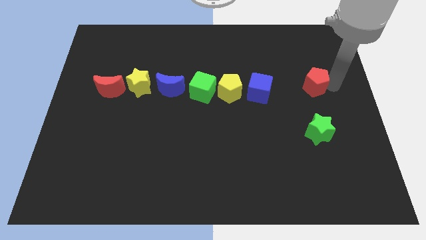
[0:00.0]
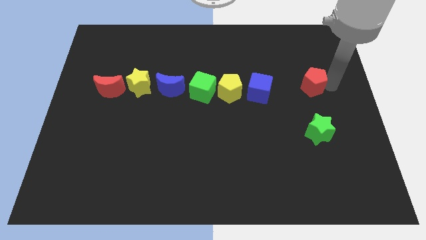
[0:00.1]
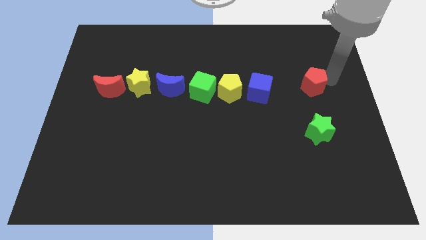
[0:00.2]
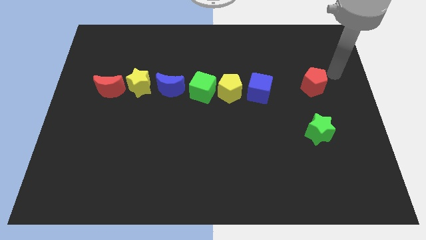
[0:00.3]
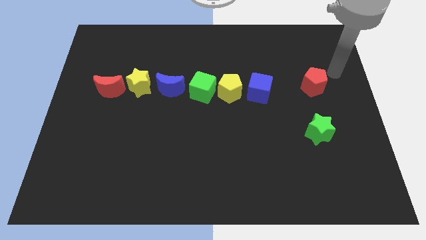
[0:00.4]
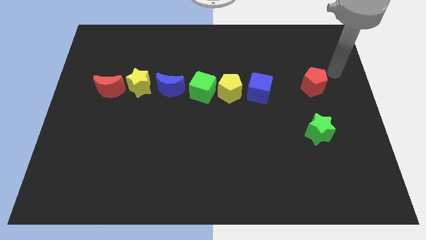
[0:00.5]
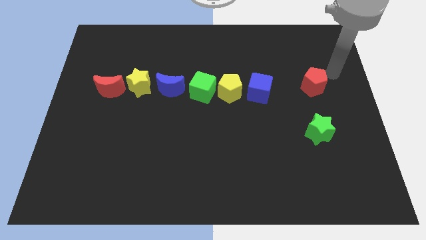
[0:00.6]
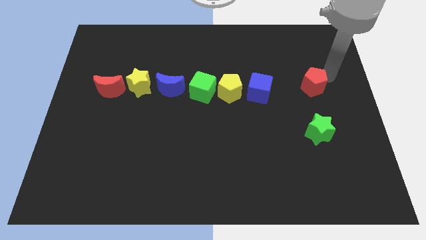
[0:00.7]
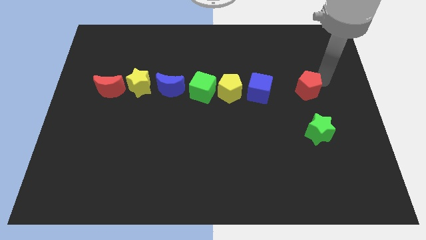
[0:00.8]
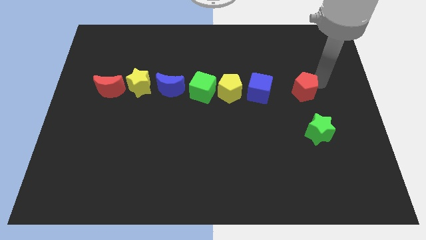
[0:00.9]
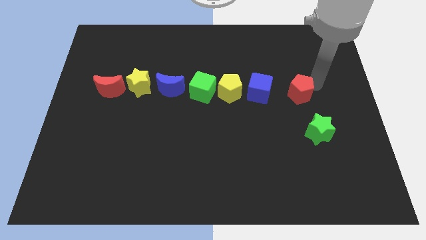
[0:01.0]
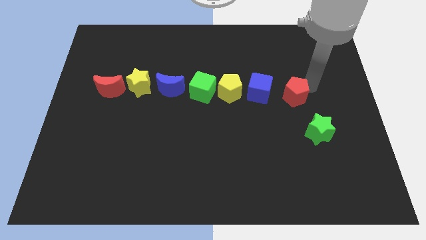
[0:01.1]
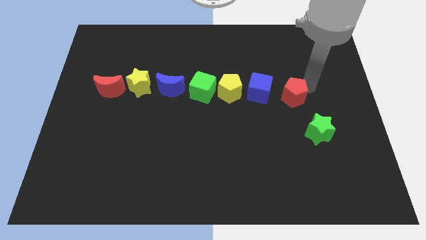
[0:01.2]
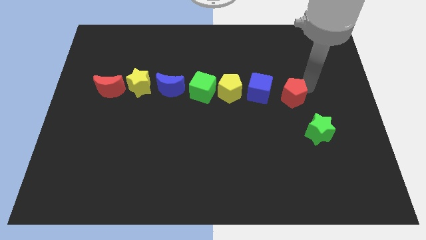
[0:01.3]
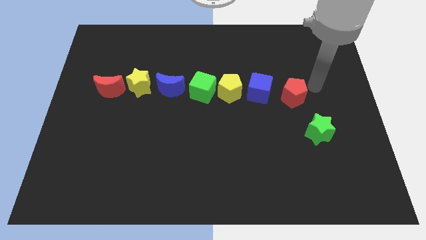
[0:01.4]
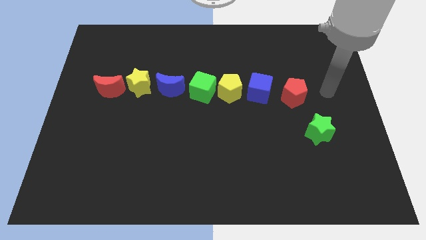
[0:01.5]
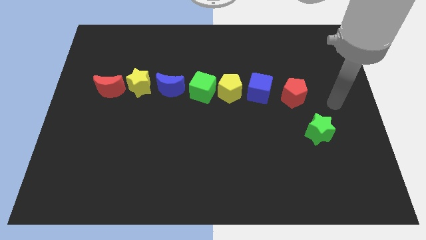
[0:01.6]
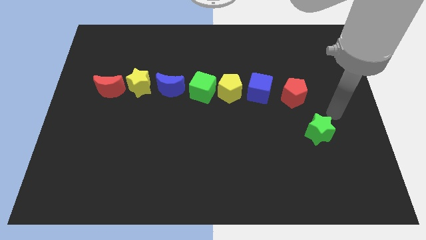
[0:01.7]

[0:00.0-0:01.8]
push the red pentagon to the right of the blue cube

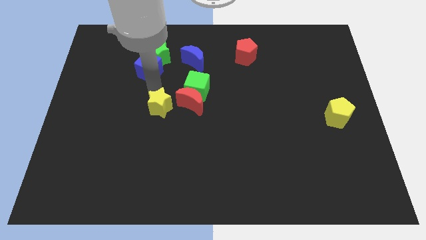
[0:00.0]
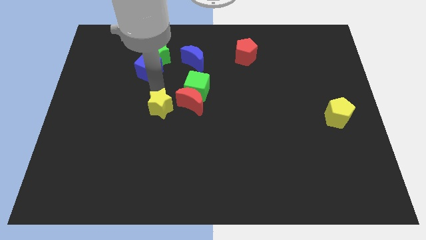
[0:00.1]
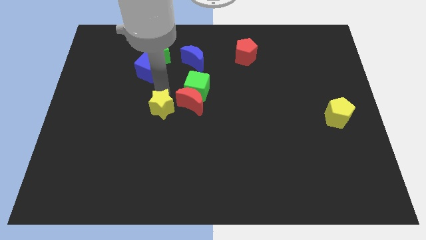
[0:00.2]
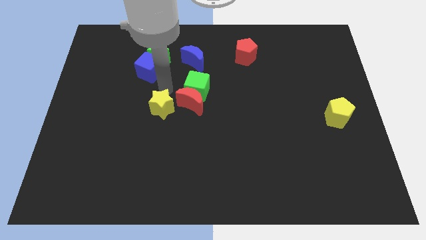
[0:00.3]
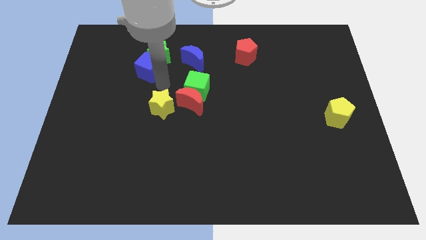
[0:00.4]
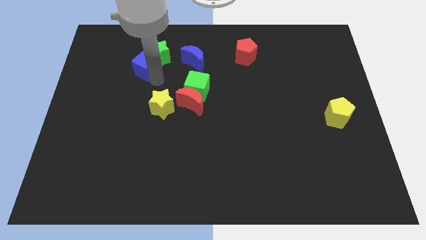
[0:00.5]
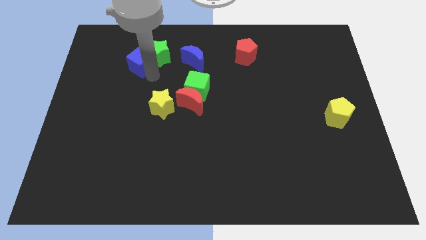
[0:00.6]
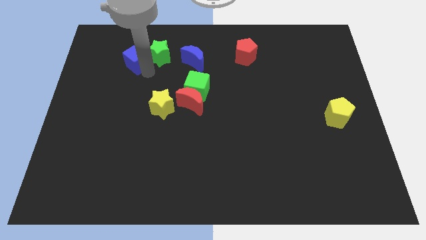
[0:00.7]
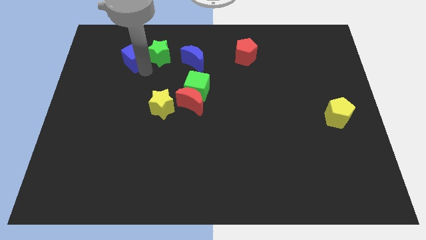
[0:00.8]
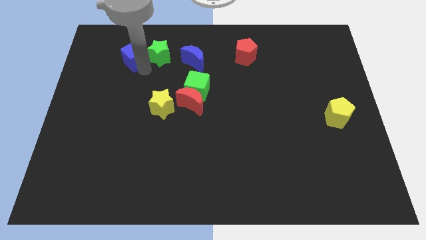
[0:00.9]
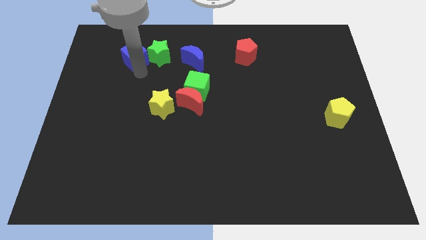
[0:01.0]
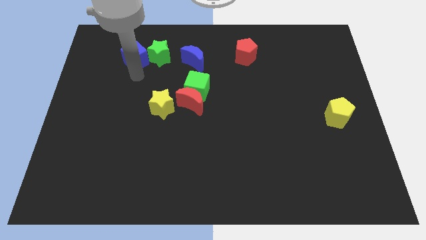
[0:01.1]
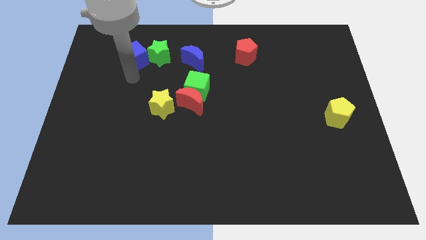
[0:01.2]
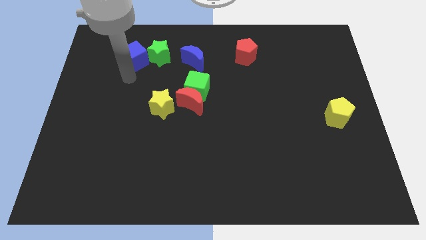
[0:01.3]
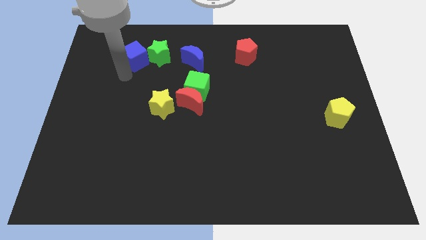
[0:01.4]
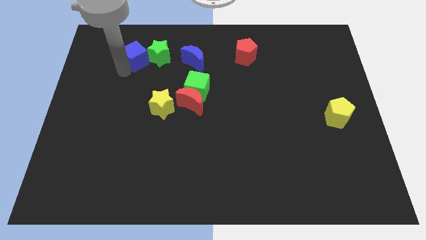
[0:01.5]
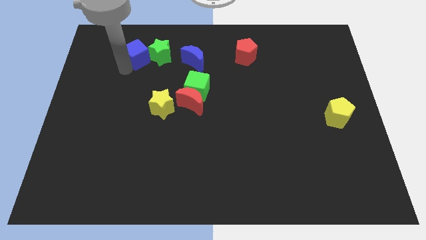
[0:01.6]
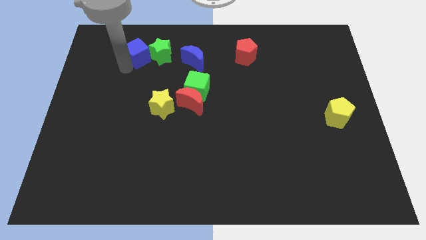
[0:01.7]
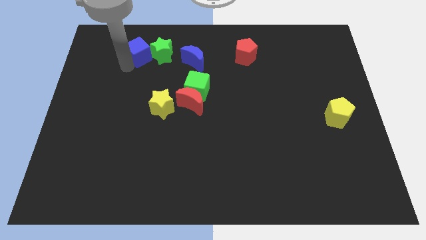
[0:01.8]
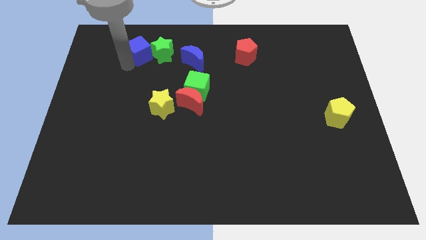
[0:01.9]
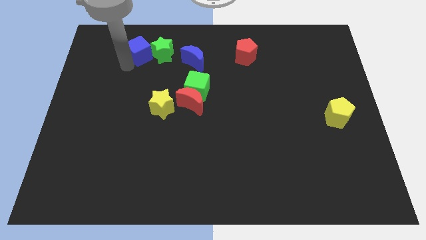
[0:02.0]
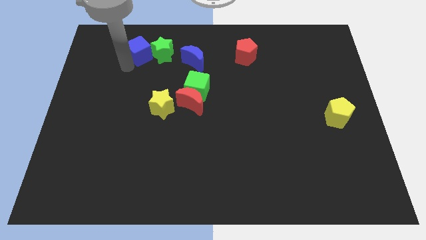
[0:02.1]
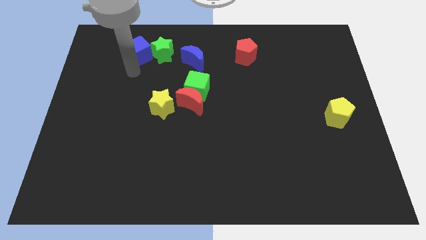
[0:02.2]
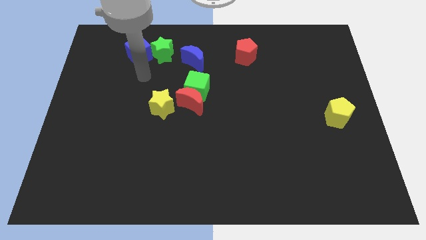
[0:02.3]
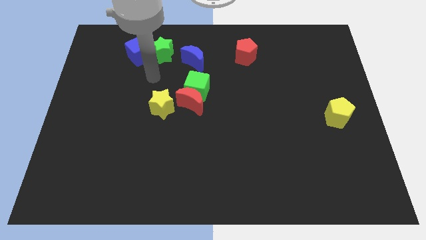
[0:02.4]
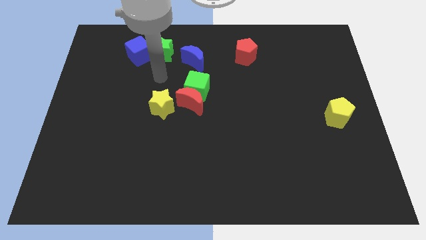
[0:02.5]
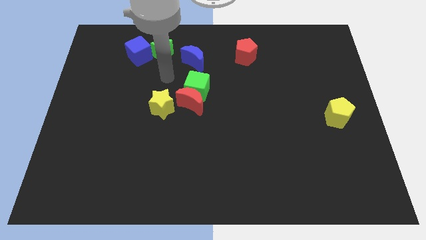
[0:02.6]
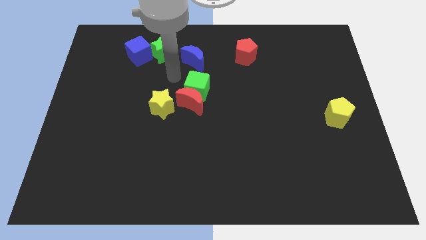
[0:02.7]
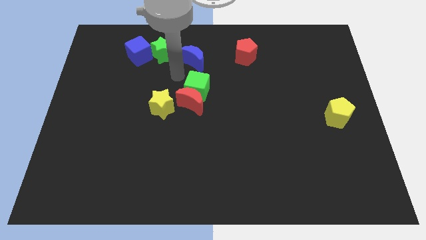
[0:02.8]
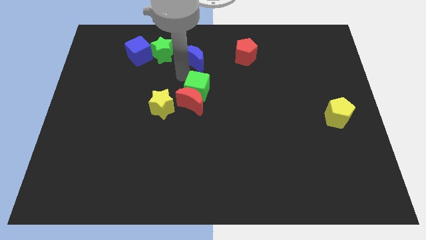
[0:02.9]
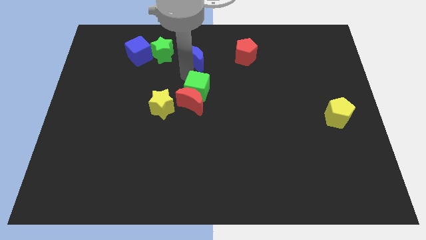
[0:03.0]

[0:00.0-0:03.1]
place green cube to the left of green star

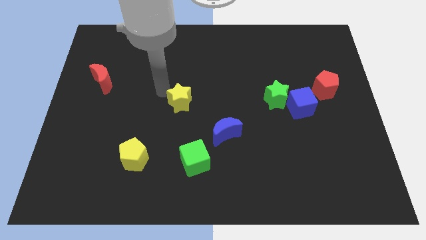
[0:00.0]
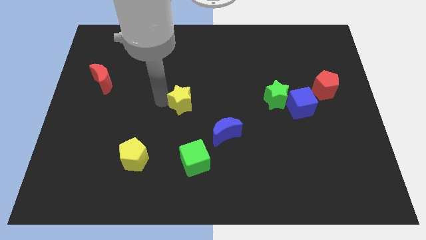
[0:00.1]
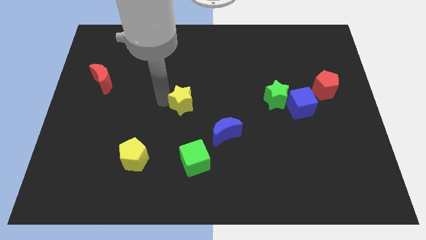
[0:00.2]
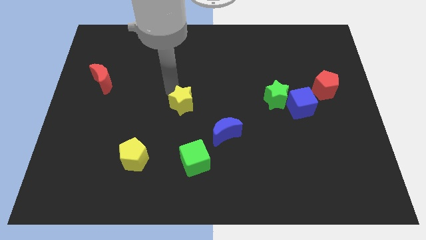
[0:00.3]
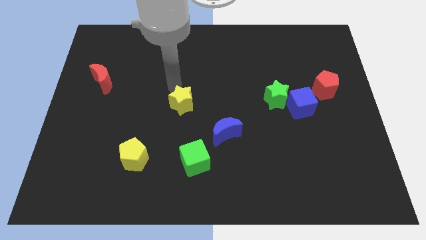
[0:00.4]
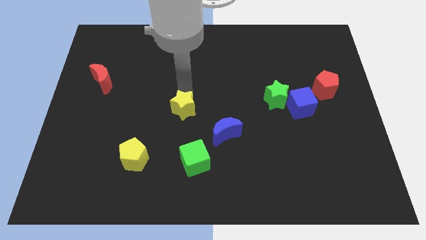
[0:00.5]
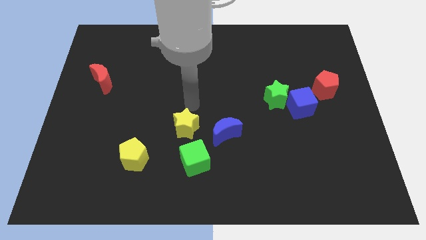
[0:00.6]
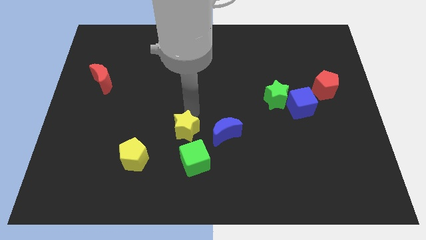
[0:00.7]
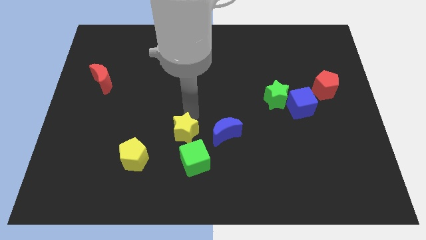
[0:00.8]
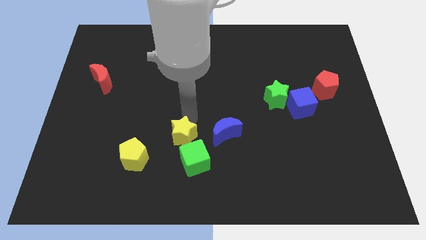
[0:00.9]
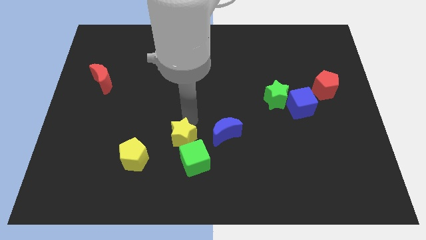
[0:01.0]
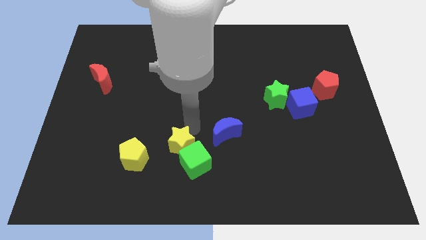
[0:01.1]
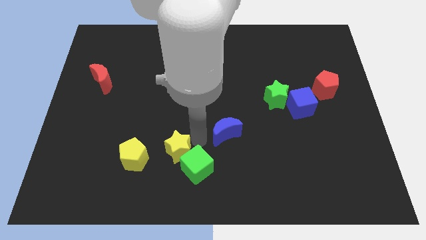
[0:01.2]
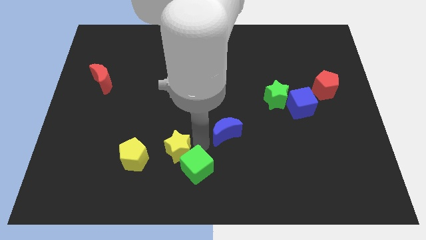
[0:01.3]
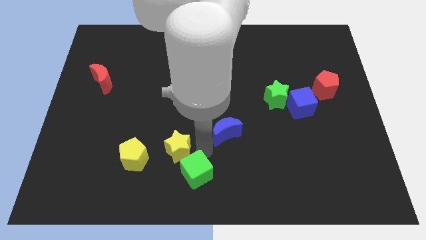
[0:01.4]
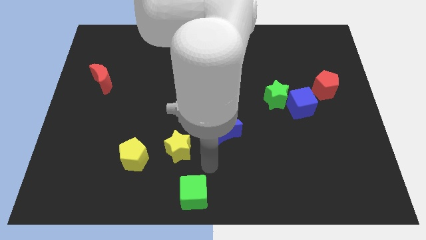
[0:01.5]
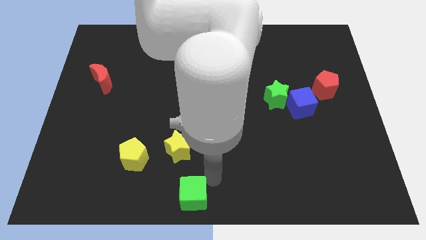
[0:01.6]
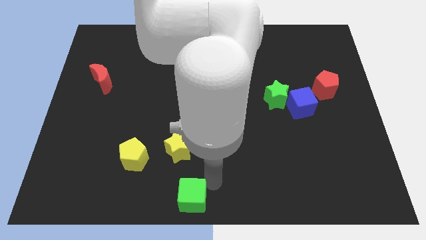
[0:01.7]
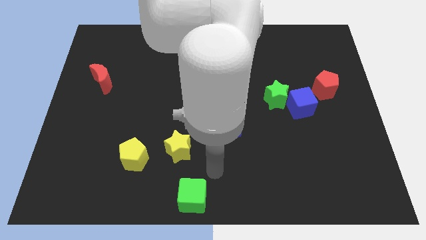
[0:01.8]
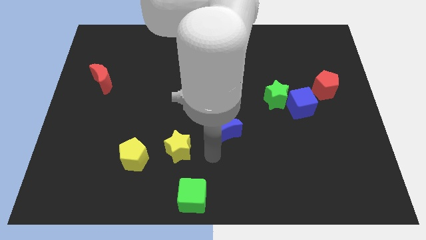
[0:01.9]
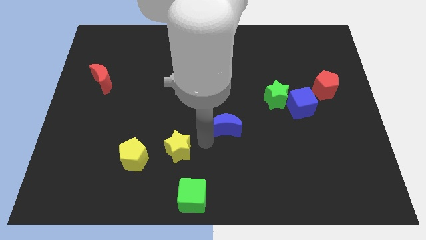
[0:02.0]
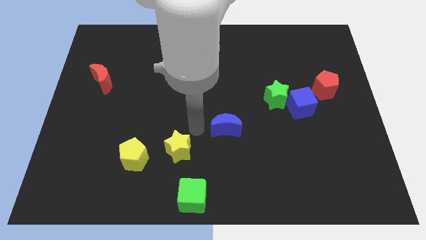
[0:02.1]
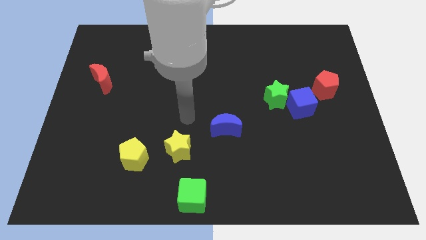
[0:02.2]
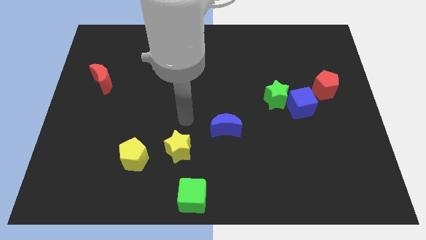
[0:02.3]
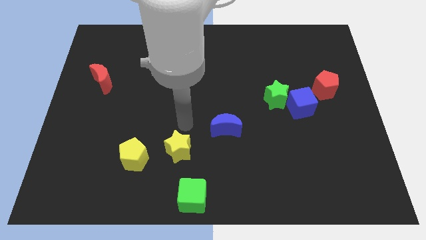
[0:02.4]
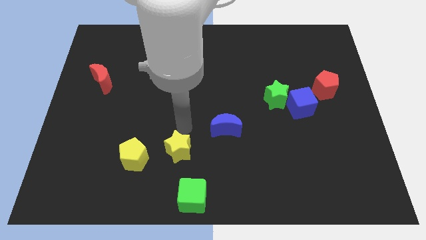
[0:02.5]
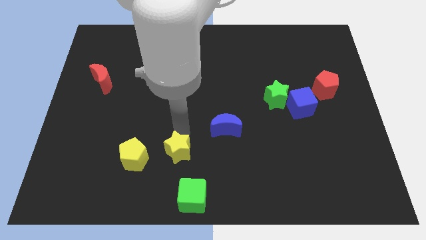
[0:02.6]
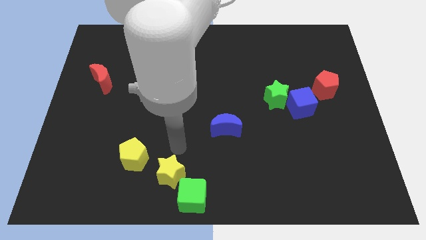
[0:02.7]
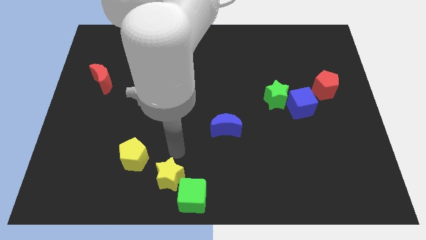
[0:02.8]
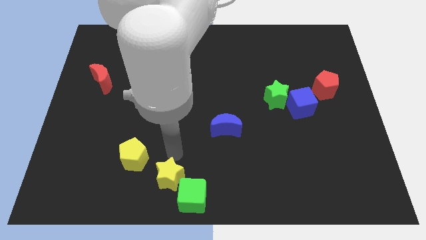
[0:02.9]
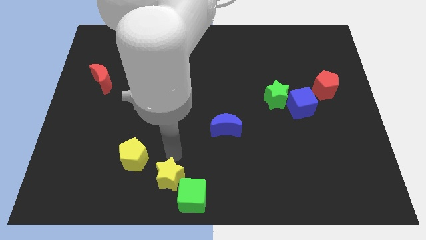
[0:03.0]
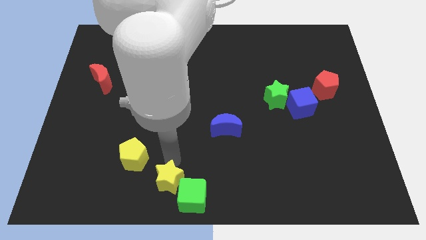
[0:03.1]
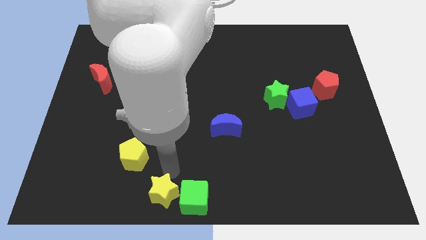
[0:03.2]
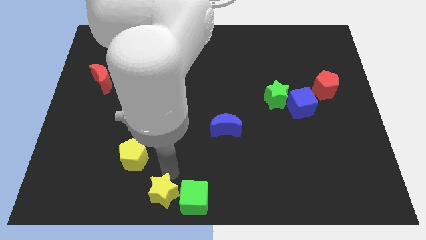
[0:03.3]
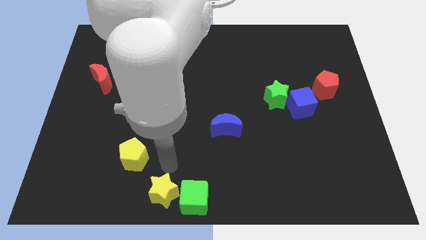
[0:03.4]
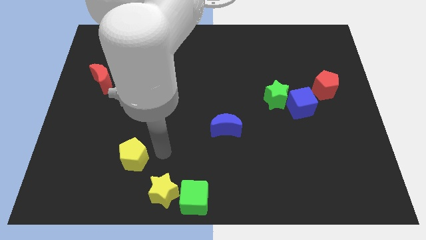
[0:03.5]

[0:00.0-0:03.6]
put the yellow star and the green cube at the bottom center

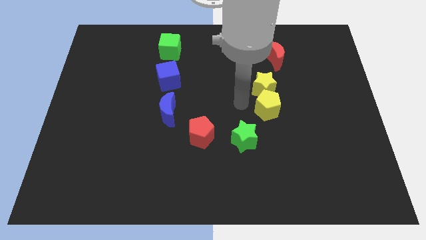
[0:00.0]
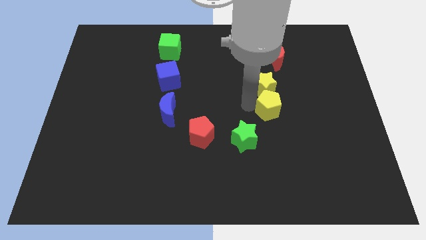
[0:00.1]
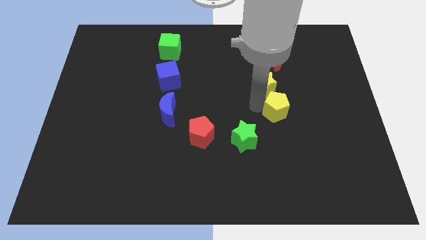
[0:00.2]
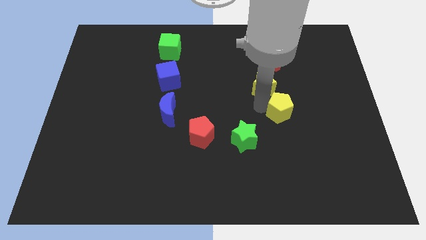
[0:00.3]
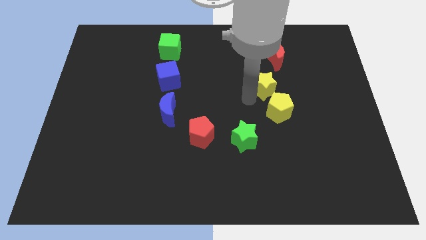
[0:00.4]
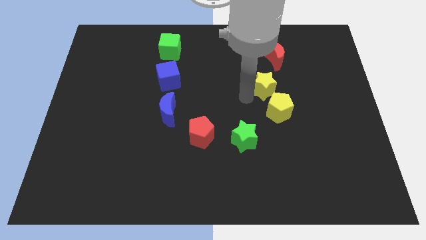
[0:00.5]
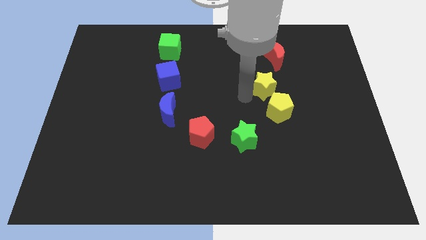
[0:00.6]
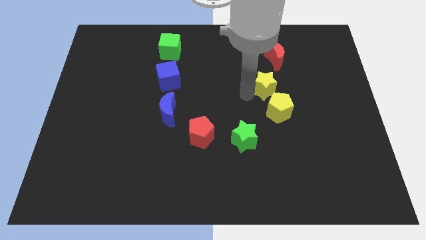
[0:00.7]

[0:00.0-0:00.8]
slightly move the yellow pentagon to the right side
